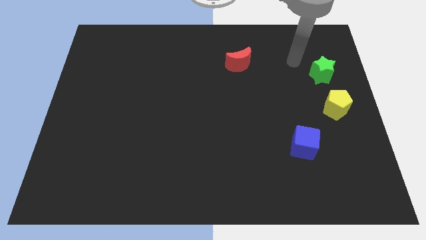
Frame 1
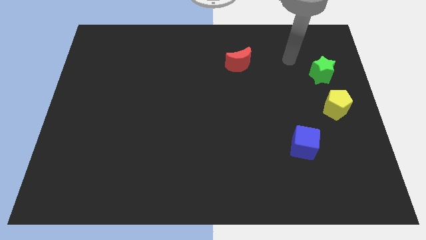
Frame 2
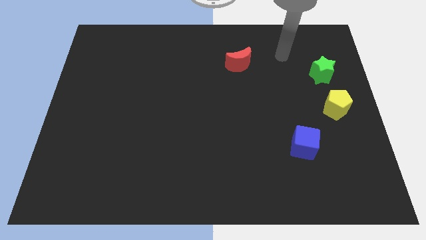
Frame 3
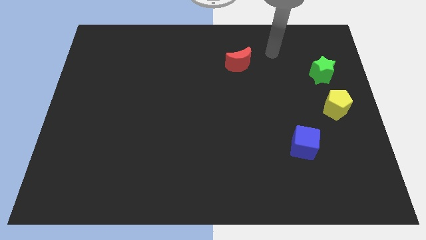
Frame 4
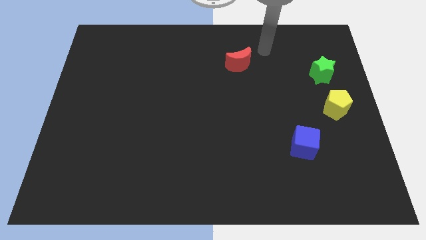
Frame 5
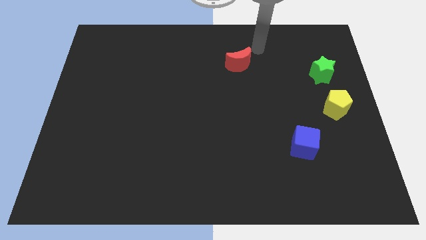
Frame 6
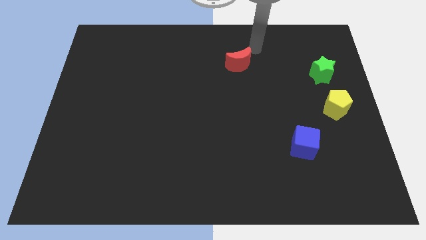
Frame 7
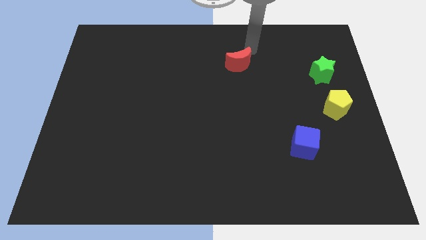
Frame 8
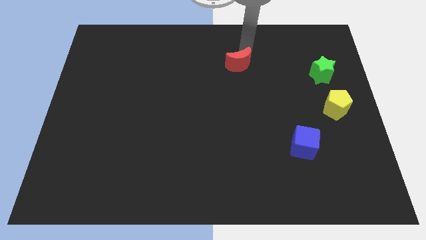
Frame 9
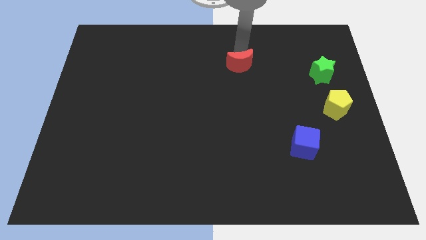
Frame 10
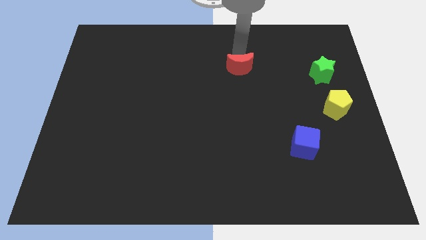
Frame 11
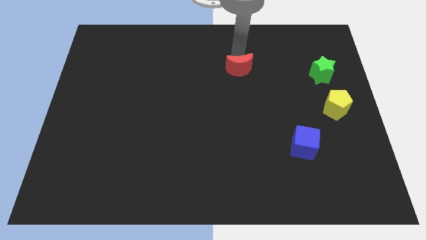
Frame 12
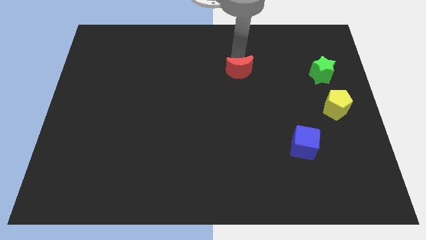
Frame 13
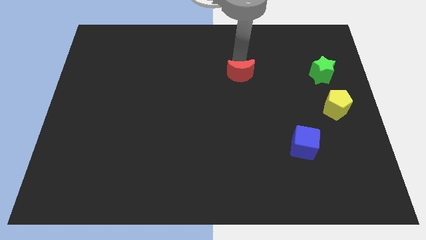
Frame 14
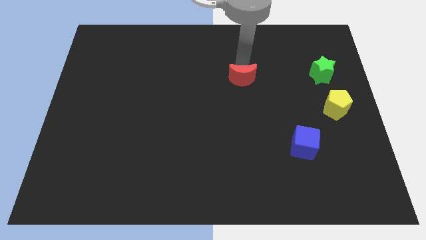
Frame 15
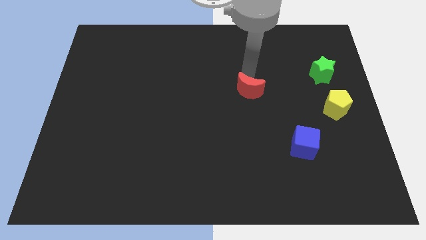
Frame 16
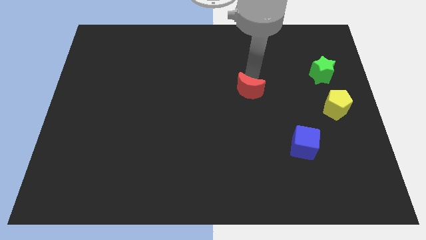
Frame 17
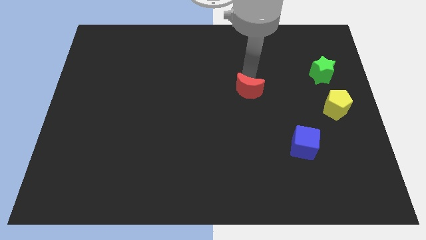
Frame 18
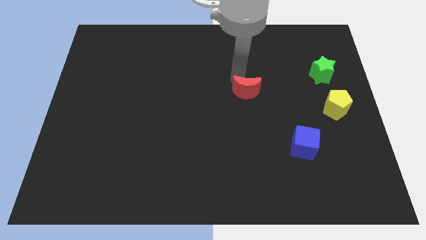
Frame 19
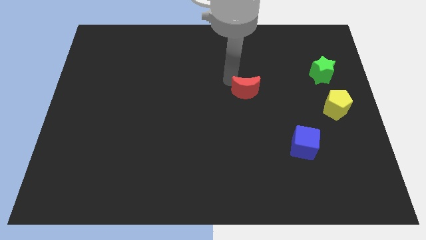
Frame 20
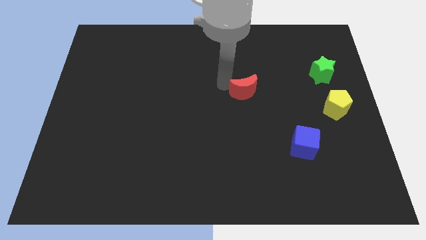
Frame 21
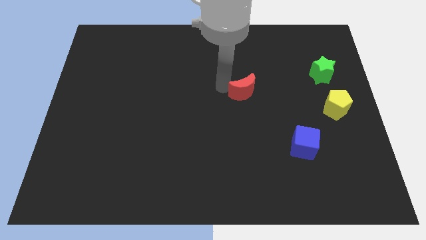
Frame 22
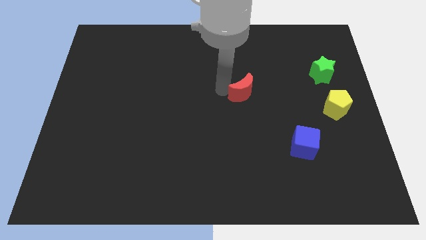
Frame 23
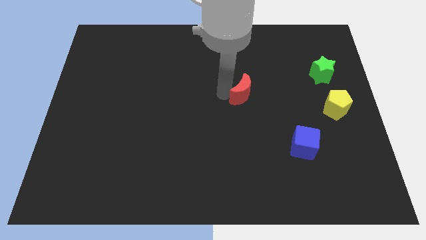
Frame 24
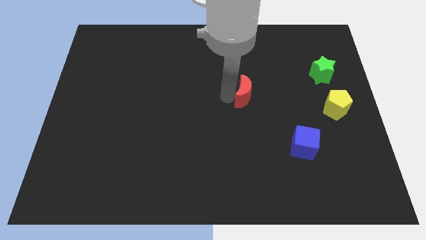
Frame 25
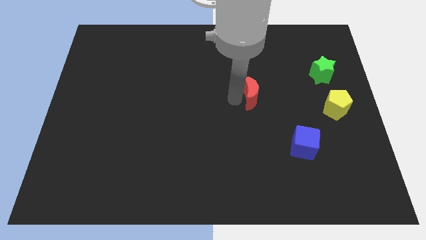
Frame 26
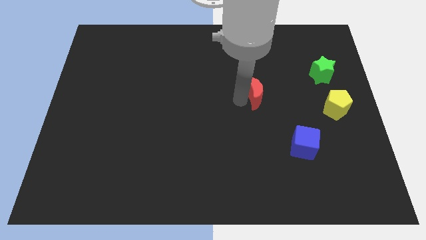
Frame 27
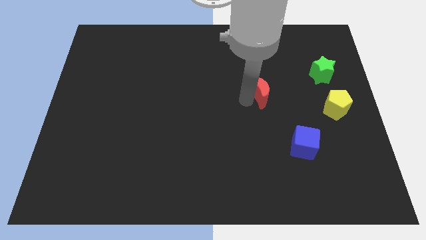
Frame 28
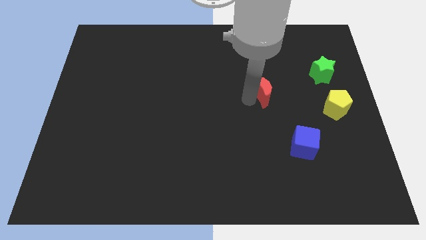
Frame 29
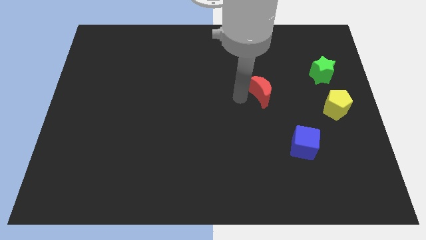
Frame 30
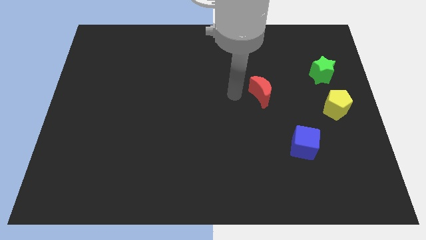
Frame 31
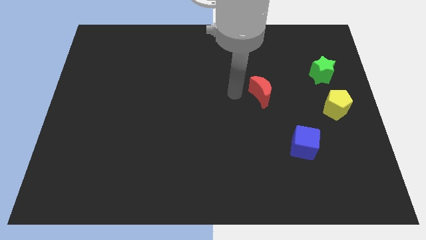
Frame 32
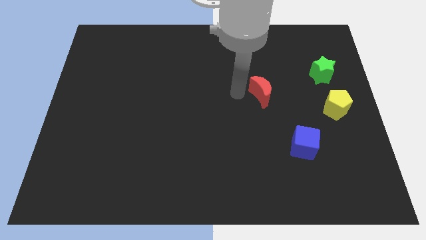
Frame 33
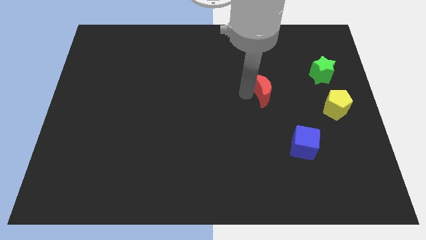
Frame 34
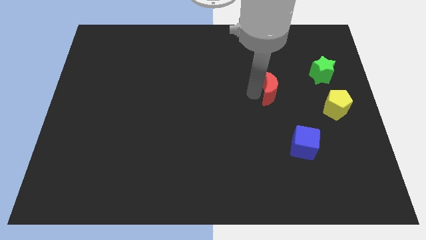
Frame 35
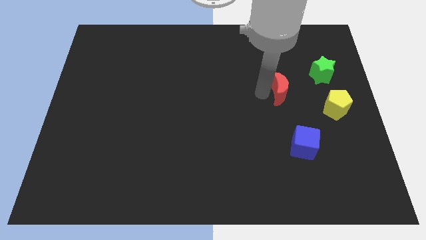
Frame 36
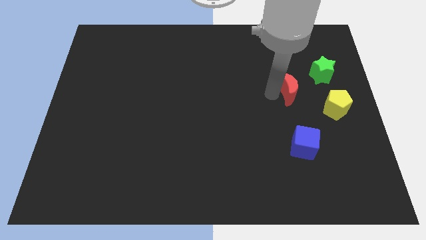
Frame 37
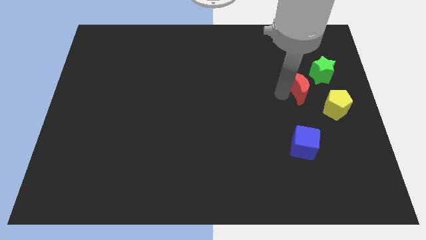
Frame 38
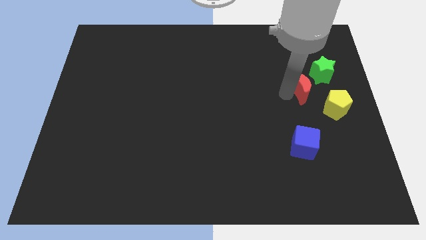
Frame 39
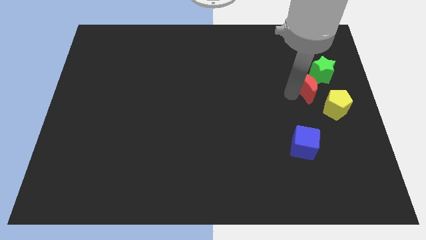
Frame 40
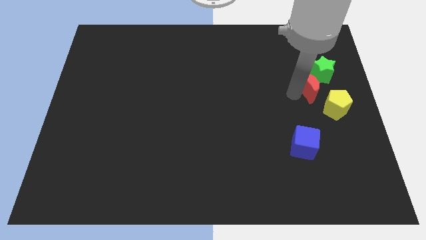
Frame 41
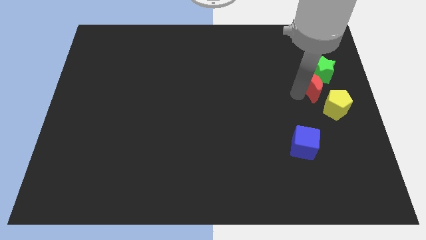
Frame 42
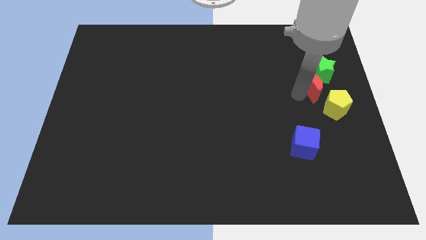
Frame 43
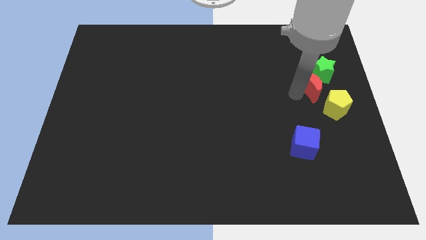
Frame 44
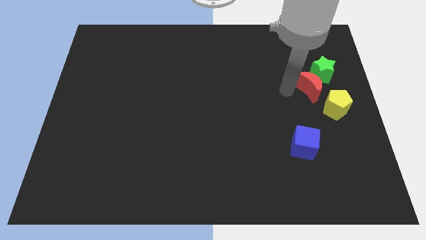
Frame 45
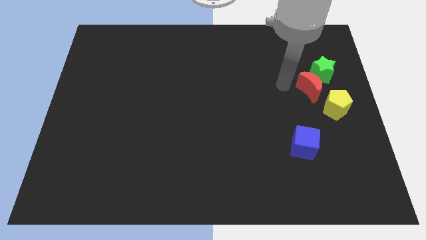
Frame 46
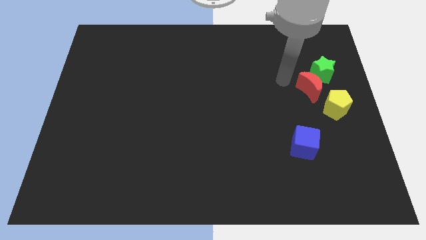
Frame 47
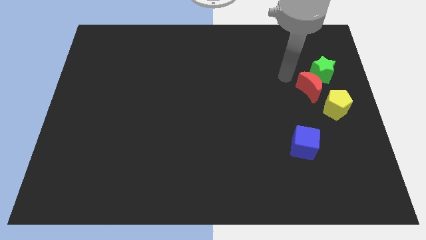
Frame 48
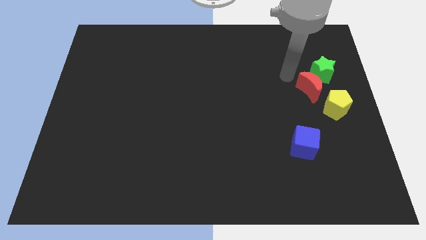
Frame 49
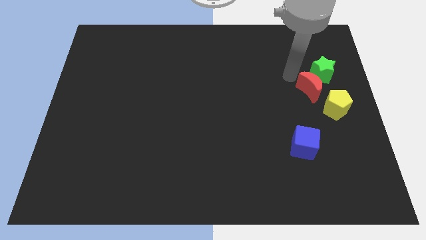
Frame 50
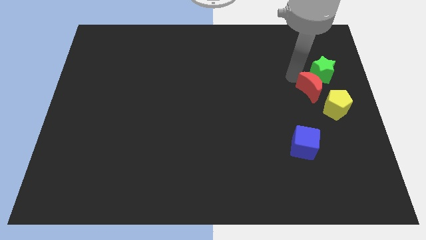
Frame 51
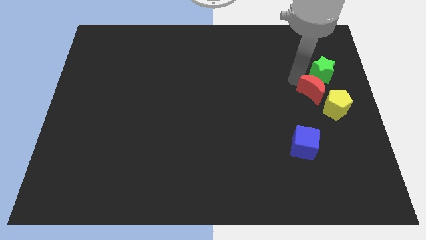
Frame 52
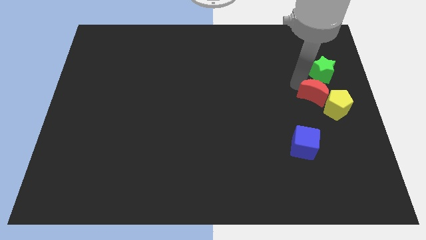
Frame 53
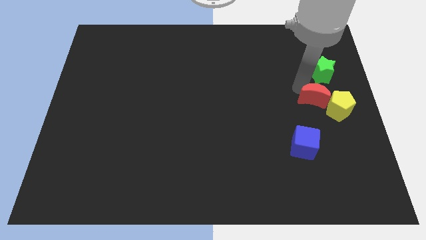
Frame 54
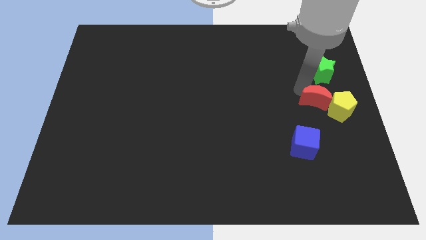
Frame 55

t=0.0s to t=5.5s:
slide the red moon close to the yellow pentagon

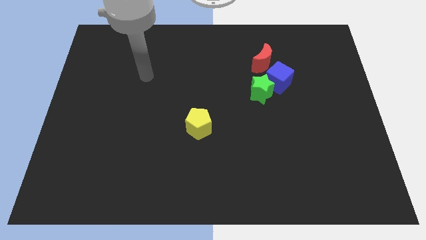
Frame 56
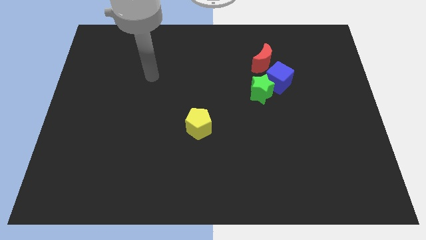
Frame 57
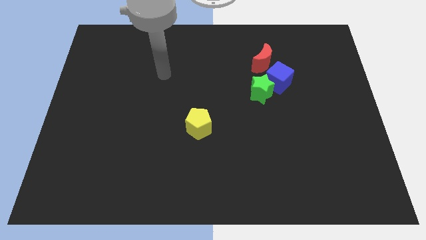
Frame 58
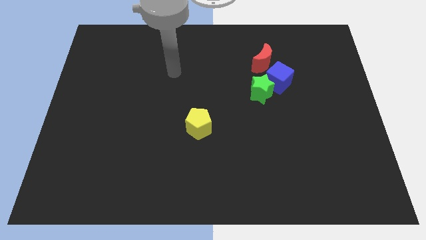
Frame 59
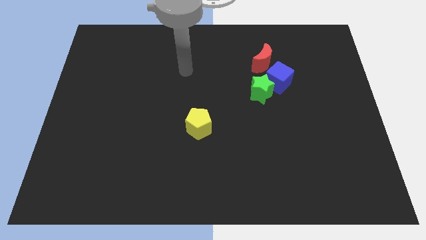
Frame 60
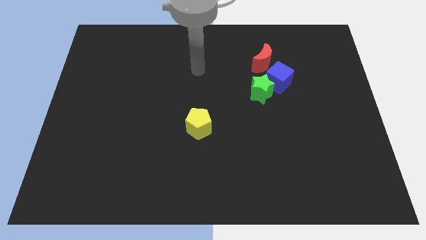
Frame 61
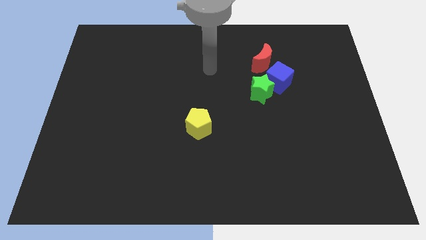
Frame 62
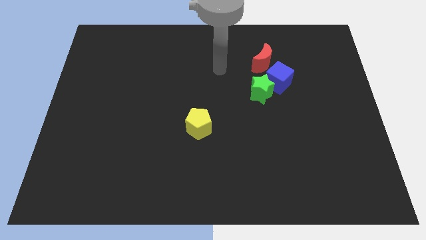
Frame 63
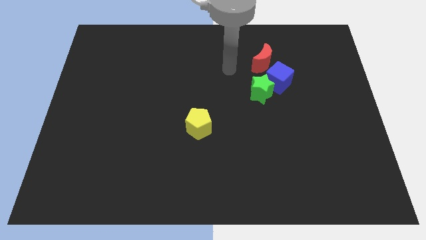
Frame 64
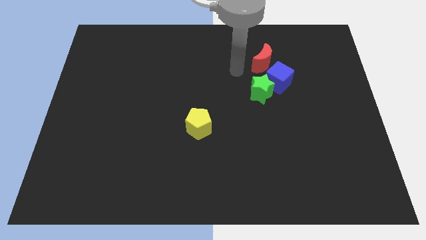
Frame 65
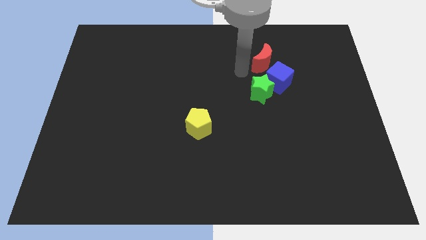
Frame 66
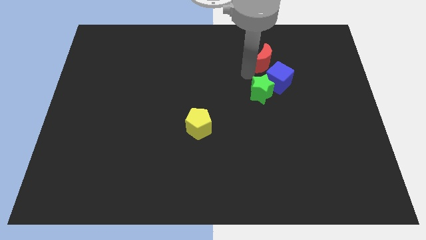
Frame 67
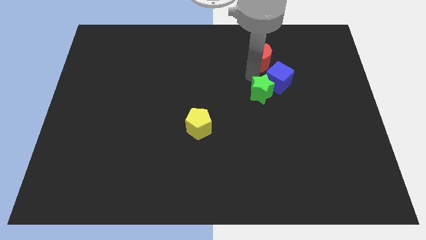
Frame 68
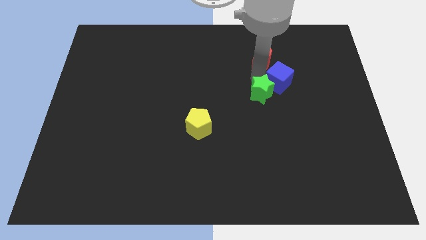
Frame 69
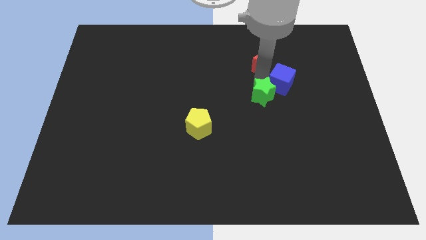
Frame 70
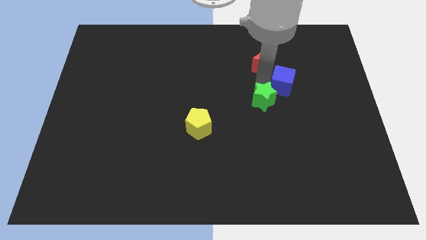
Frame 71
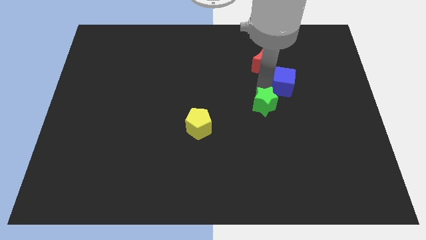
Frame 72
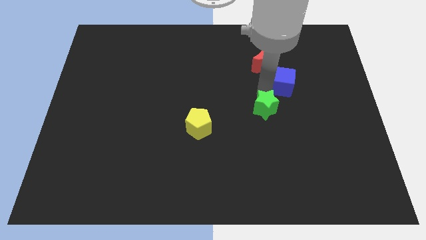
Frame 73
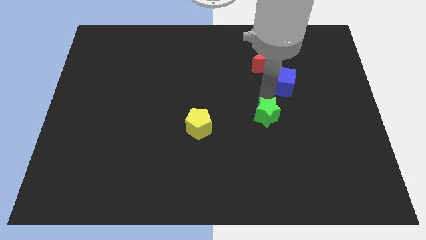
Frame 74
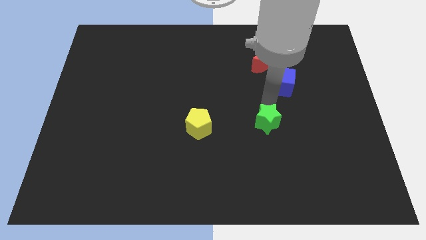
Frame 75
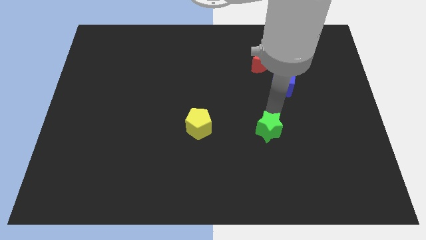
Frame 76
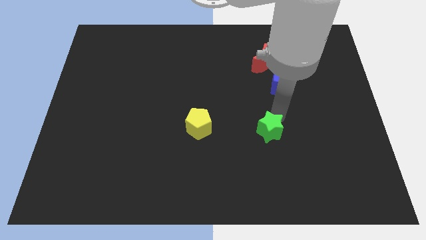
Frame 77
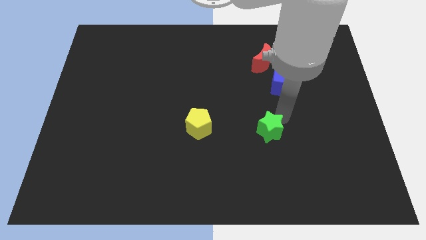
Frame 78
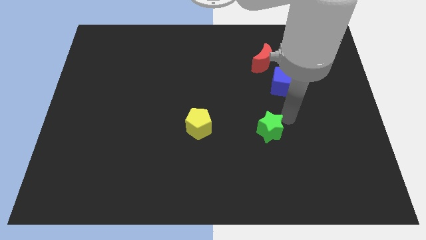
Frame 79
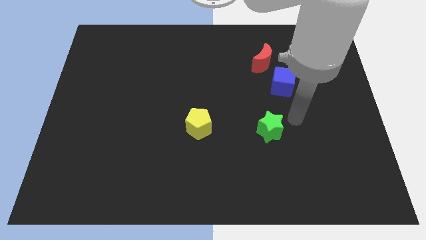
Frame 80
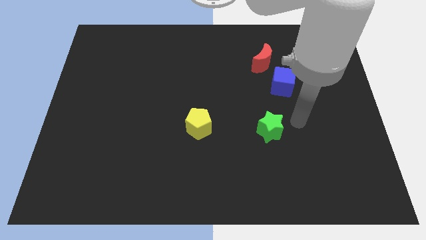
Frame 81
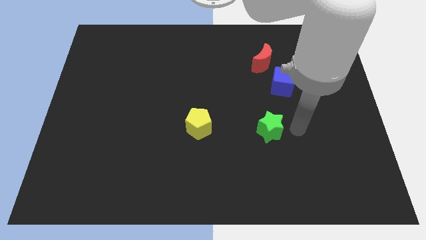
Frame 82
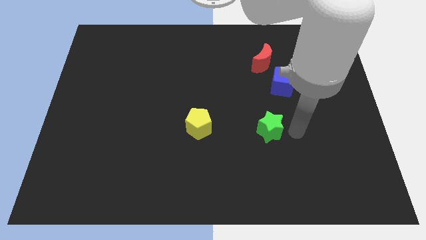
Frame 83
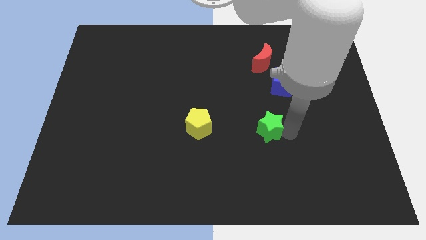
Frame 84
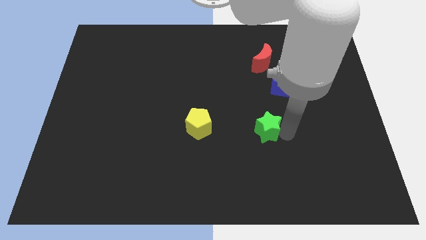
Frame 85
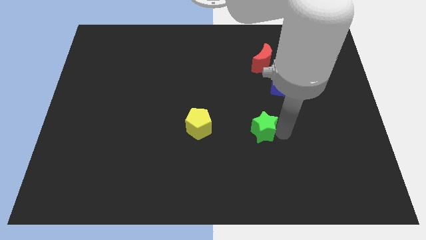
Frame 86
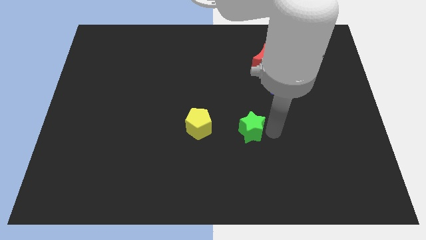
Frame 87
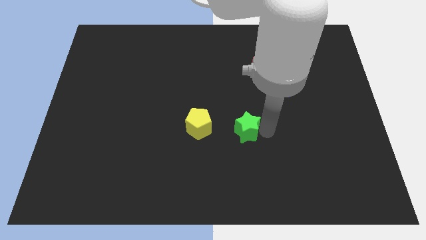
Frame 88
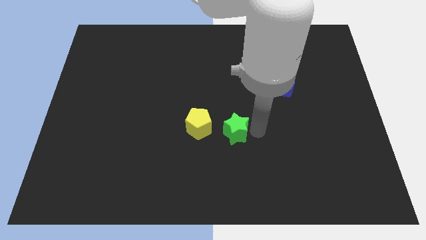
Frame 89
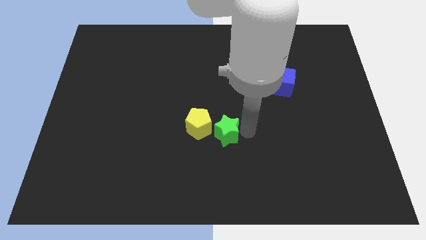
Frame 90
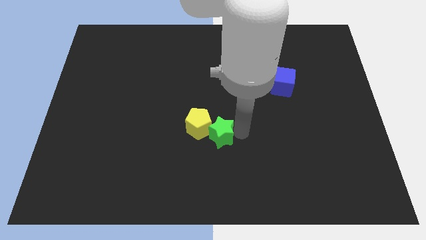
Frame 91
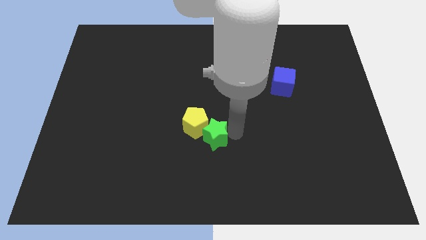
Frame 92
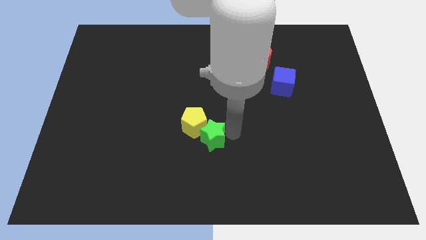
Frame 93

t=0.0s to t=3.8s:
move the green star to the yellow block
